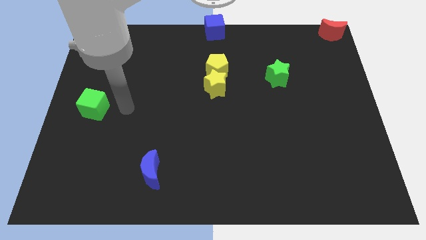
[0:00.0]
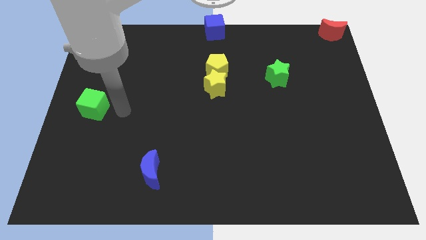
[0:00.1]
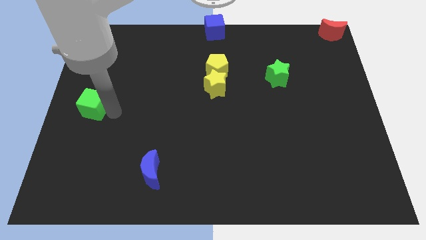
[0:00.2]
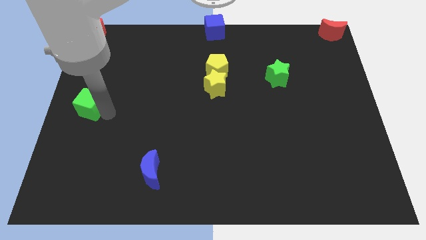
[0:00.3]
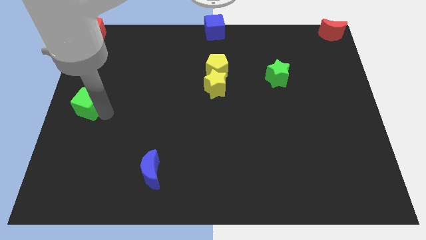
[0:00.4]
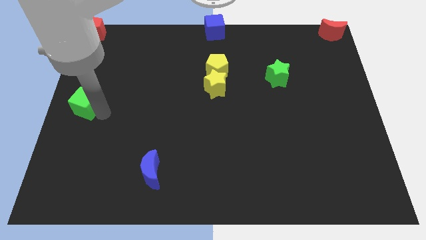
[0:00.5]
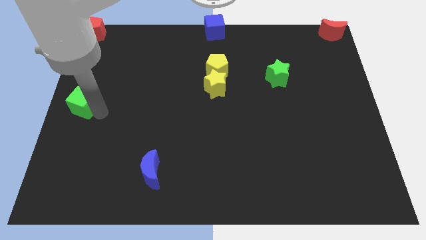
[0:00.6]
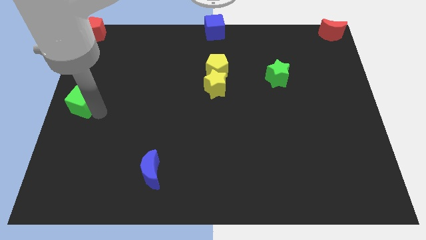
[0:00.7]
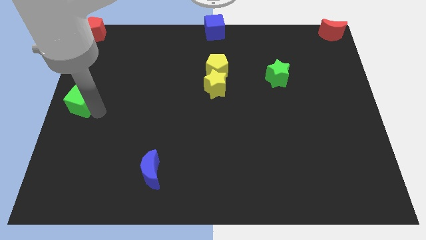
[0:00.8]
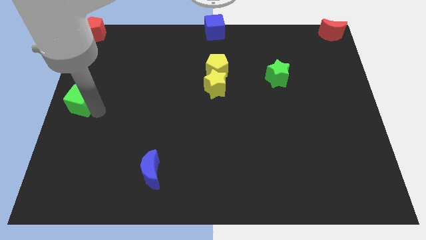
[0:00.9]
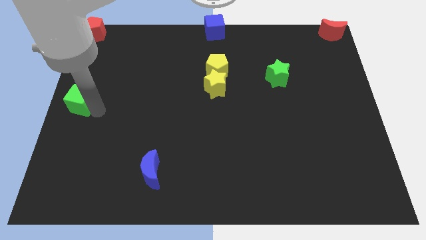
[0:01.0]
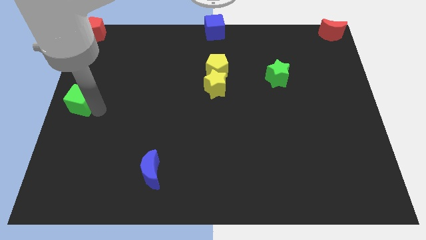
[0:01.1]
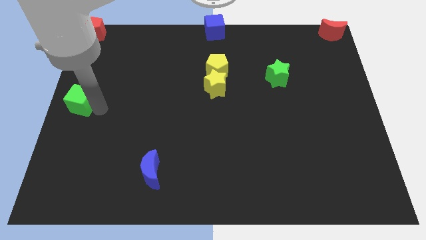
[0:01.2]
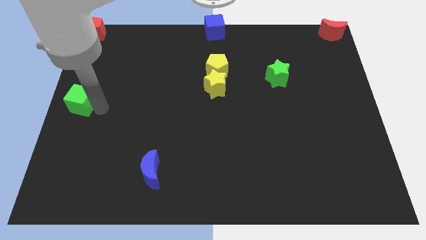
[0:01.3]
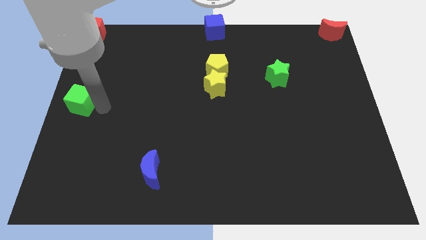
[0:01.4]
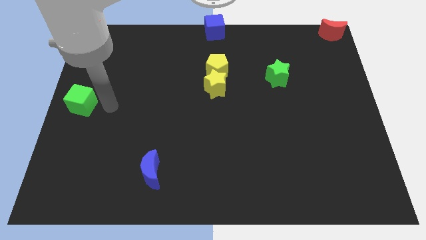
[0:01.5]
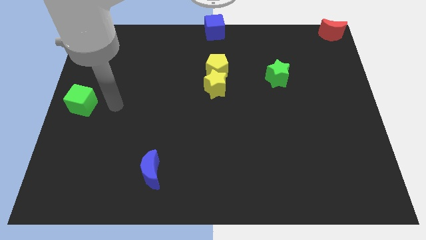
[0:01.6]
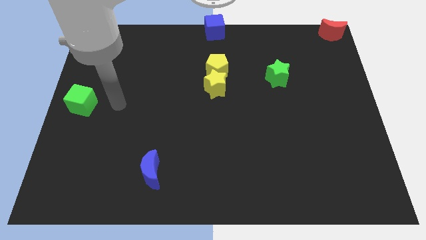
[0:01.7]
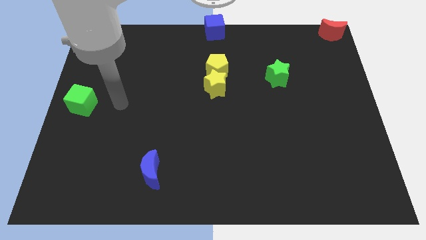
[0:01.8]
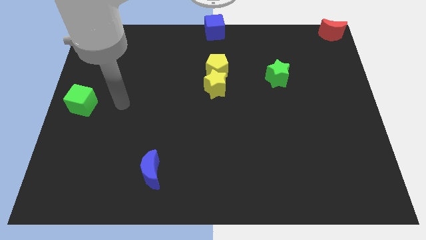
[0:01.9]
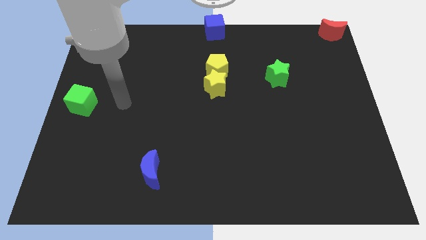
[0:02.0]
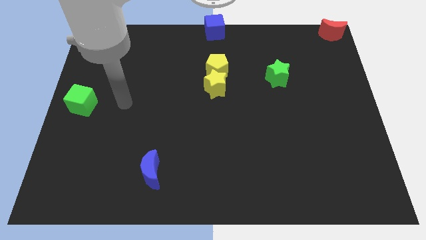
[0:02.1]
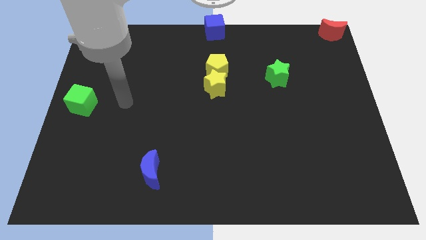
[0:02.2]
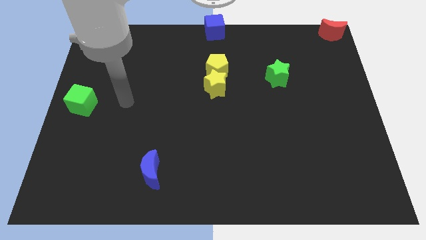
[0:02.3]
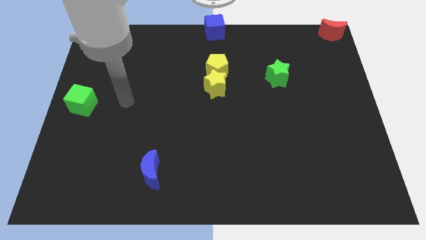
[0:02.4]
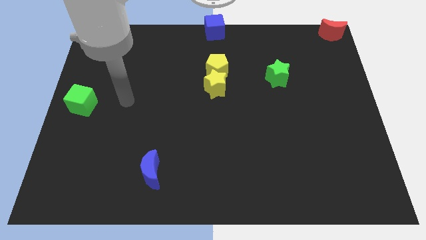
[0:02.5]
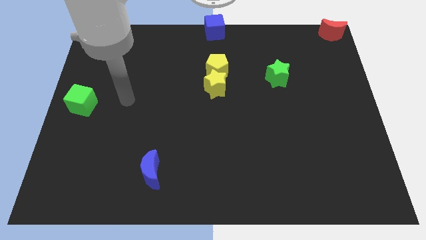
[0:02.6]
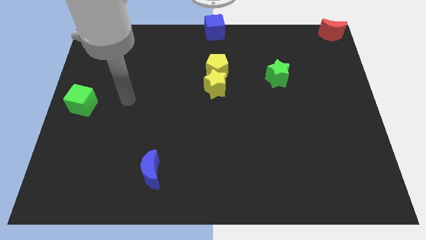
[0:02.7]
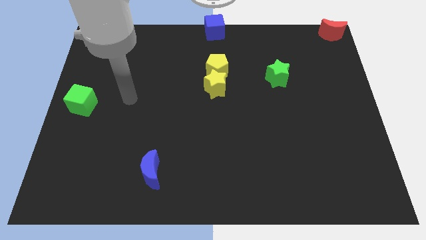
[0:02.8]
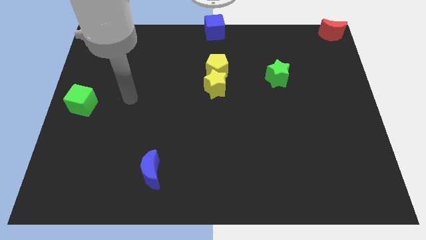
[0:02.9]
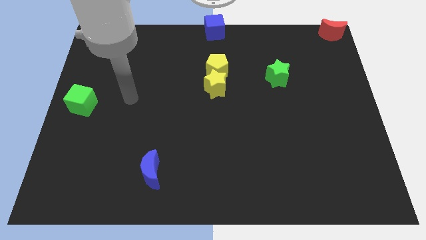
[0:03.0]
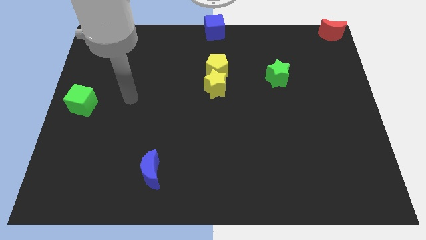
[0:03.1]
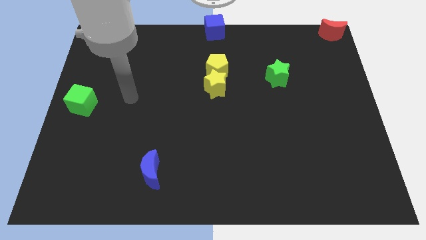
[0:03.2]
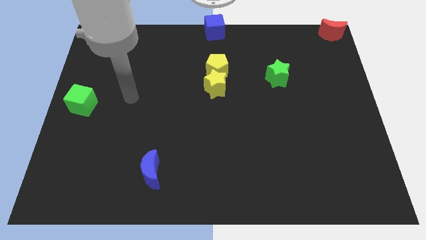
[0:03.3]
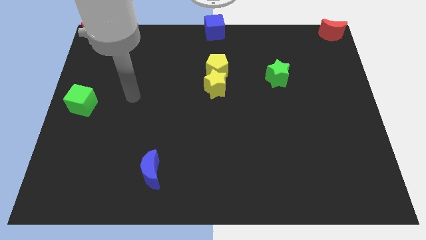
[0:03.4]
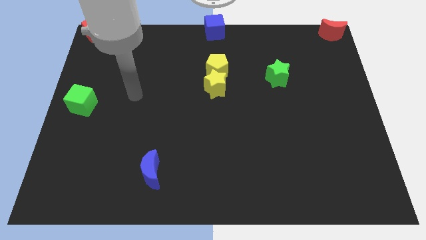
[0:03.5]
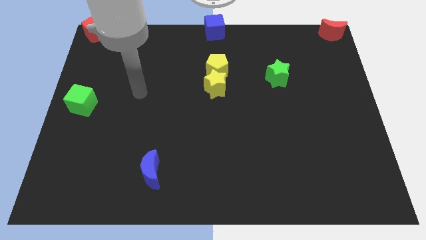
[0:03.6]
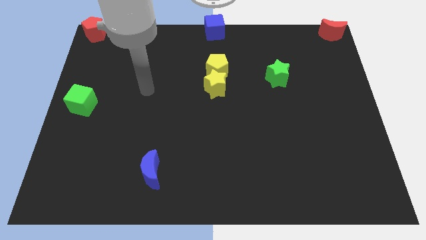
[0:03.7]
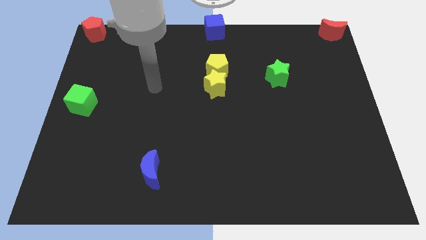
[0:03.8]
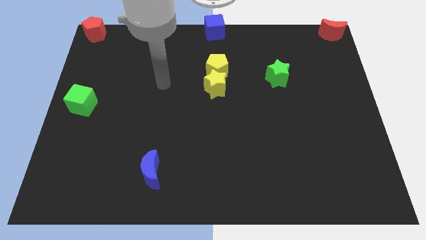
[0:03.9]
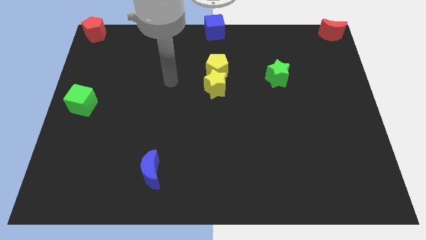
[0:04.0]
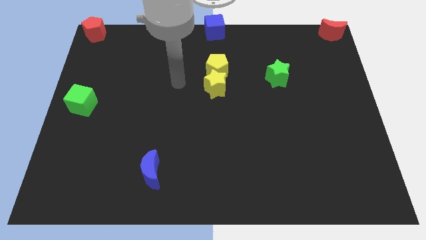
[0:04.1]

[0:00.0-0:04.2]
slide the green cube towards the left side of the board

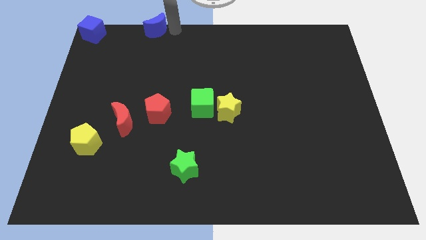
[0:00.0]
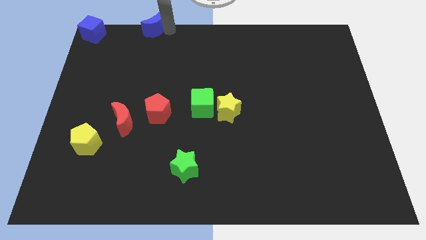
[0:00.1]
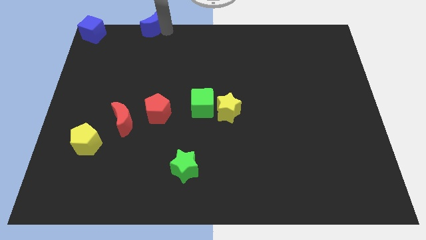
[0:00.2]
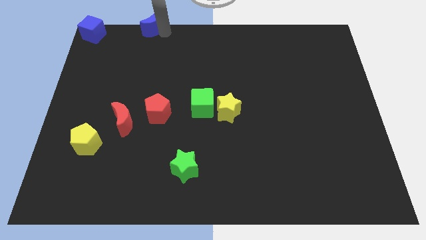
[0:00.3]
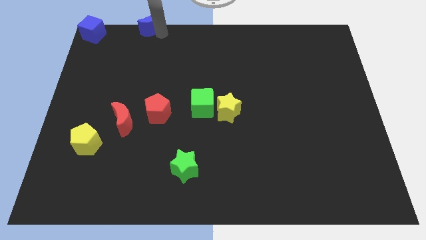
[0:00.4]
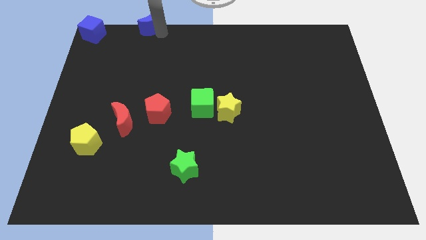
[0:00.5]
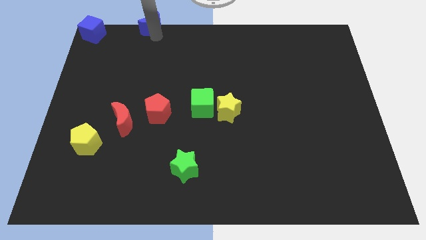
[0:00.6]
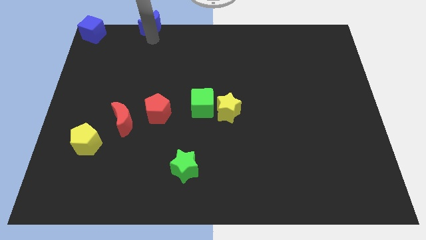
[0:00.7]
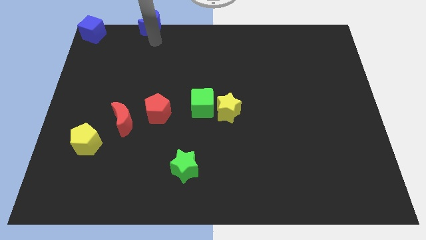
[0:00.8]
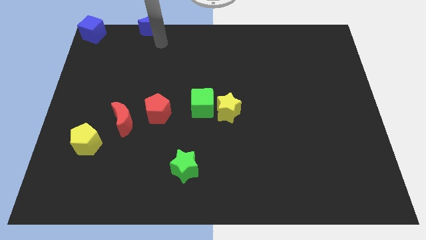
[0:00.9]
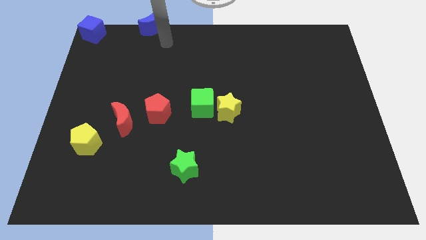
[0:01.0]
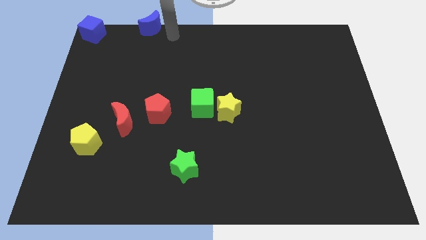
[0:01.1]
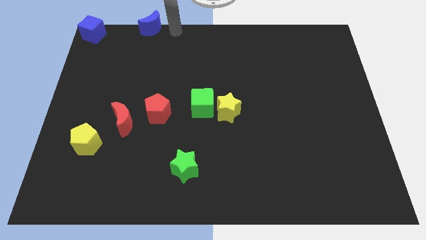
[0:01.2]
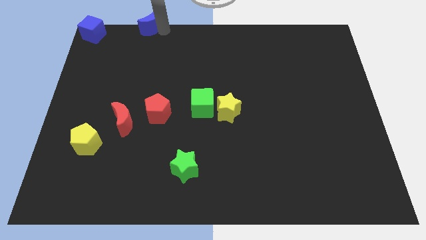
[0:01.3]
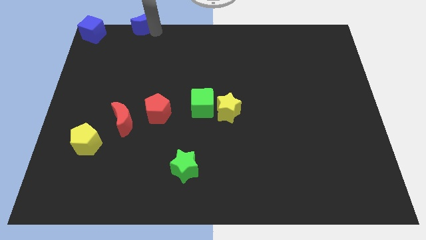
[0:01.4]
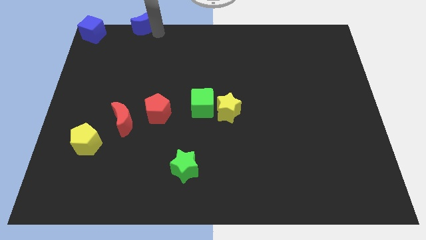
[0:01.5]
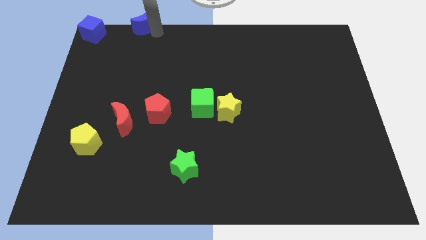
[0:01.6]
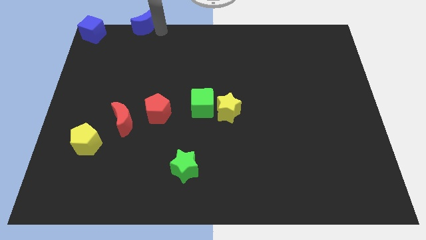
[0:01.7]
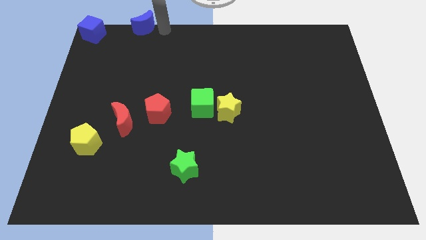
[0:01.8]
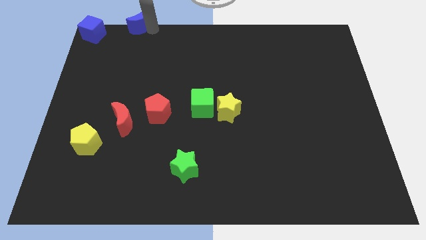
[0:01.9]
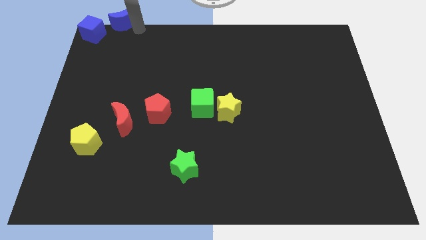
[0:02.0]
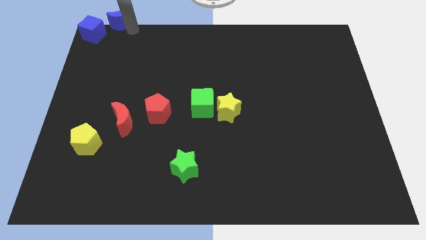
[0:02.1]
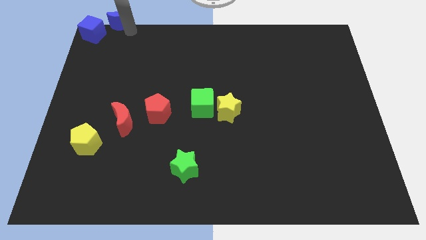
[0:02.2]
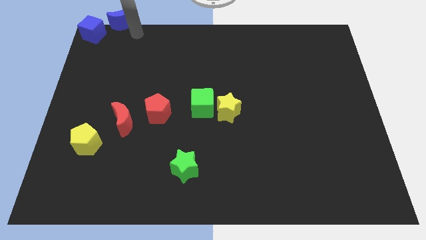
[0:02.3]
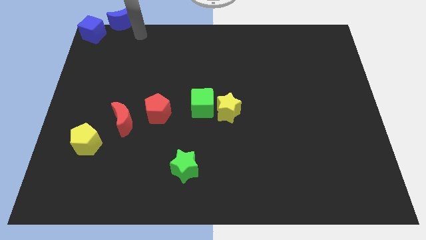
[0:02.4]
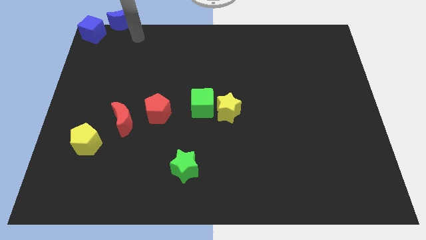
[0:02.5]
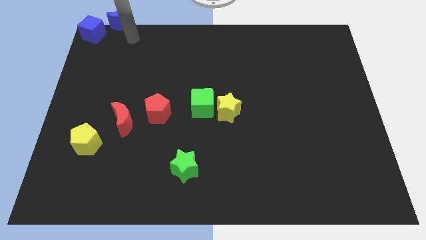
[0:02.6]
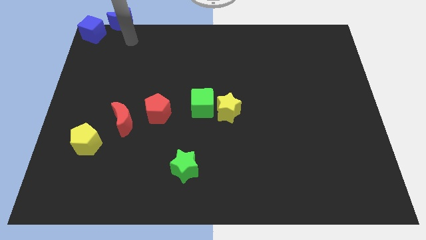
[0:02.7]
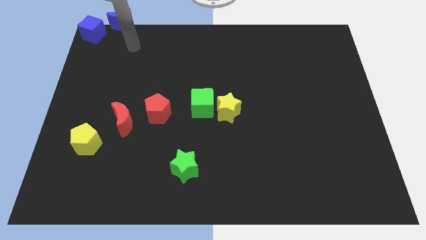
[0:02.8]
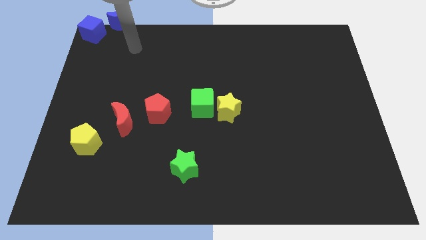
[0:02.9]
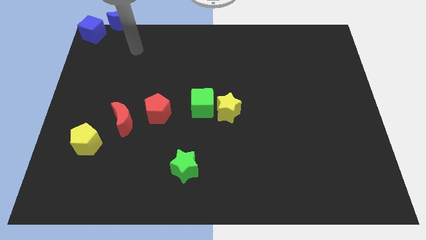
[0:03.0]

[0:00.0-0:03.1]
put the blue moon at the top left side of the blue cube

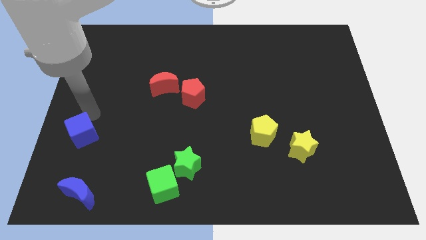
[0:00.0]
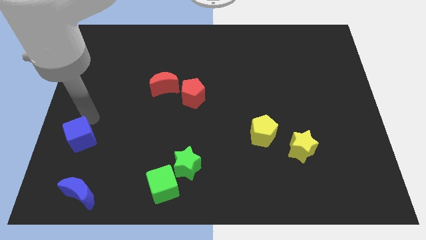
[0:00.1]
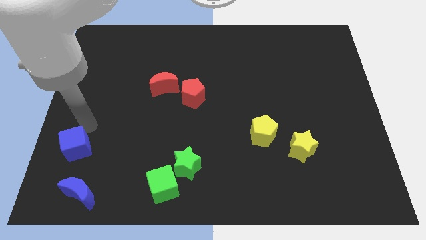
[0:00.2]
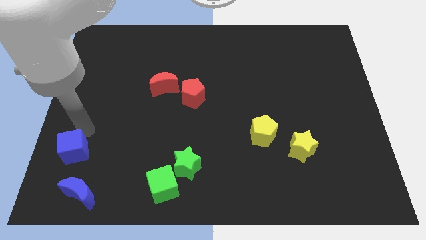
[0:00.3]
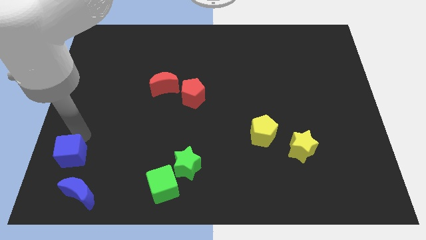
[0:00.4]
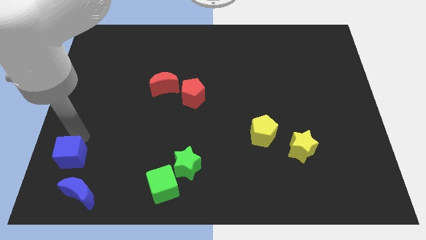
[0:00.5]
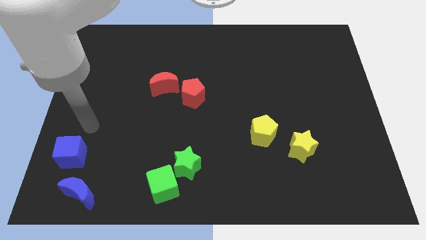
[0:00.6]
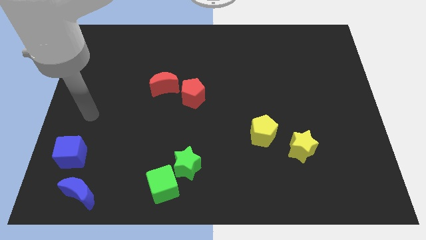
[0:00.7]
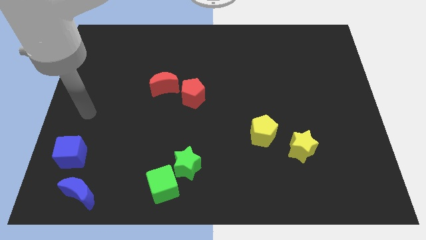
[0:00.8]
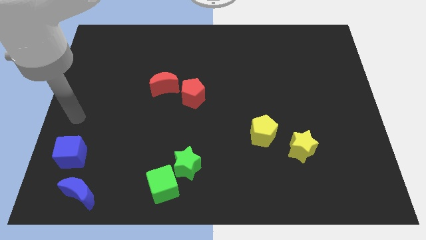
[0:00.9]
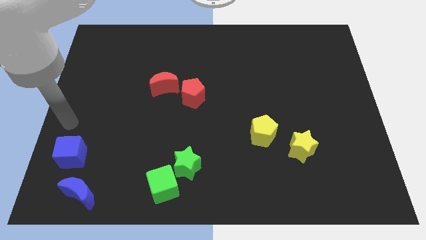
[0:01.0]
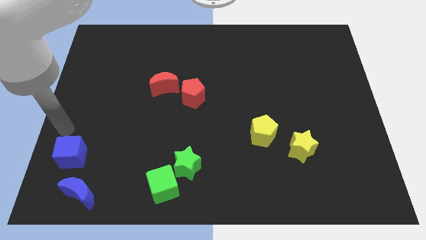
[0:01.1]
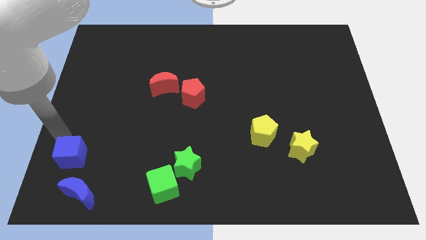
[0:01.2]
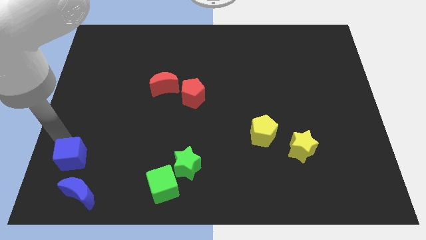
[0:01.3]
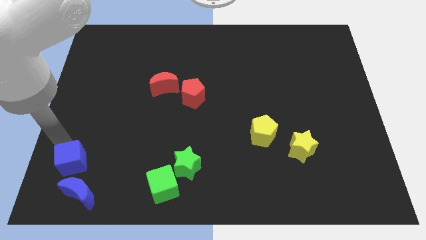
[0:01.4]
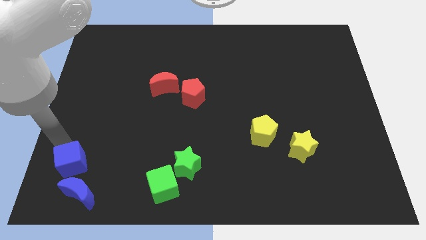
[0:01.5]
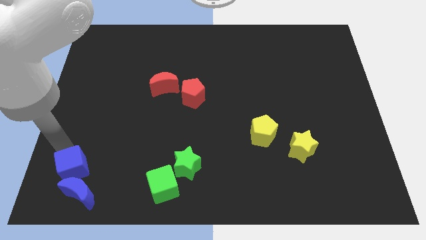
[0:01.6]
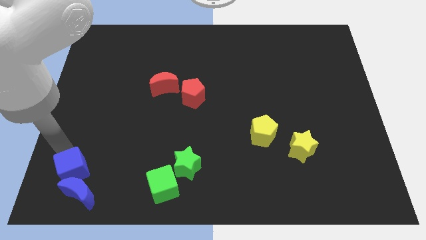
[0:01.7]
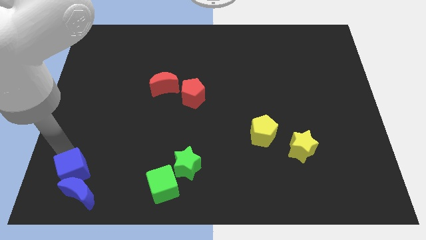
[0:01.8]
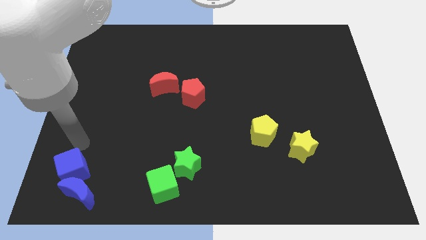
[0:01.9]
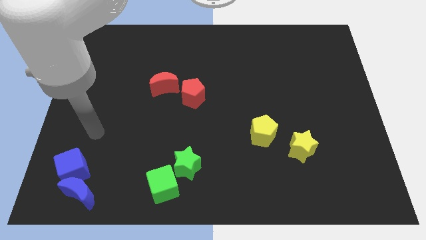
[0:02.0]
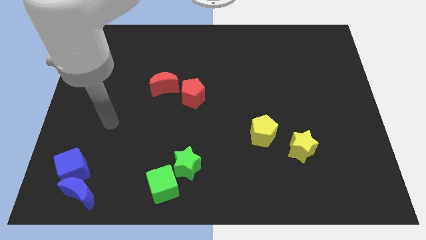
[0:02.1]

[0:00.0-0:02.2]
put the blue moon at the top left side of the blue crescent
